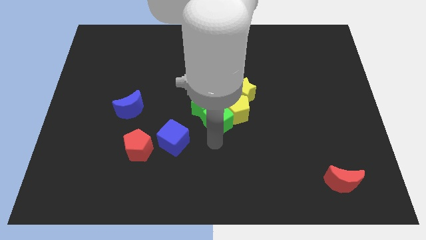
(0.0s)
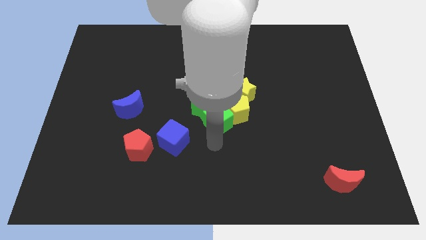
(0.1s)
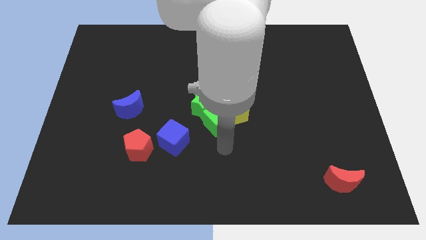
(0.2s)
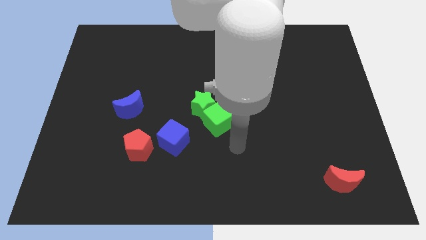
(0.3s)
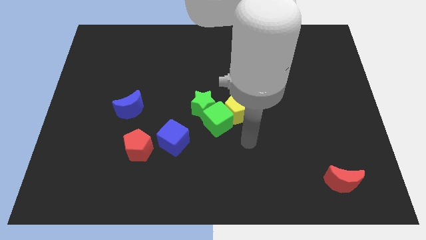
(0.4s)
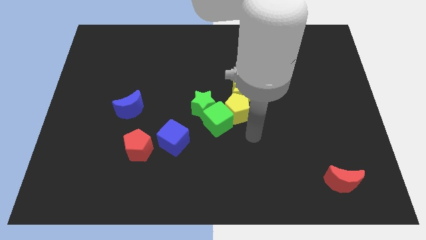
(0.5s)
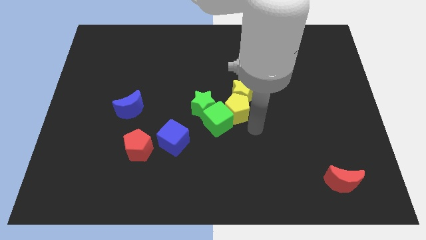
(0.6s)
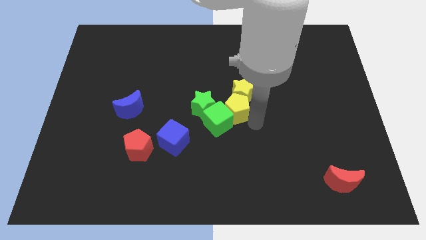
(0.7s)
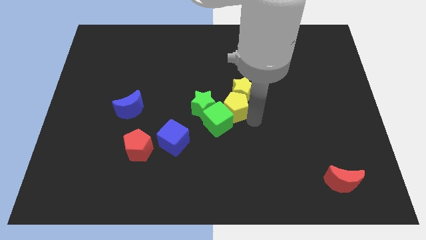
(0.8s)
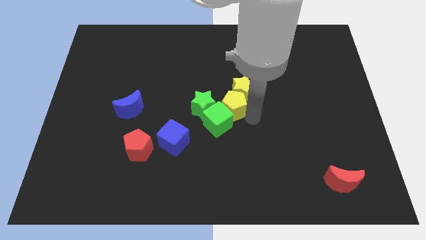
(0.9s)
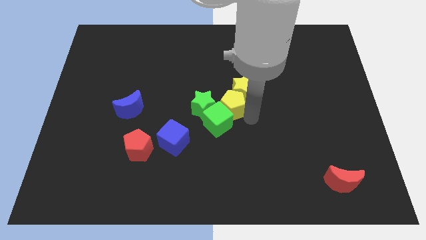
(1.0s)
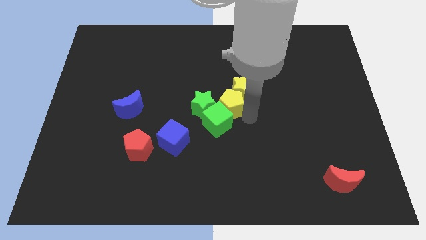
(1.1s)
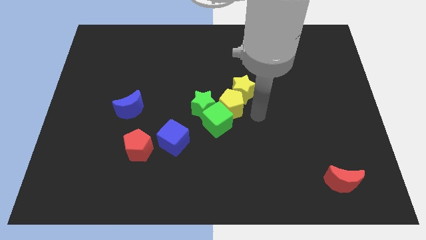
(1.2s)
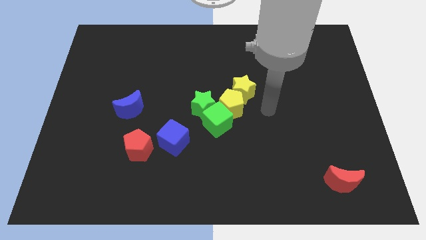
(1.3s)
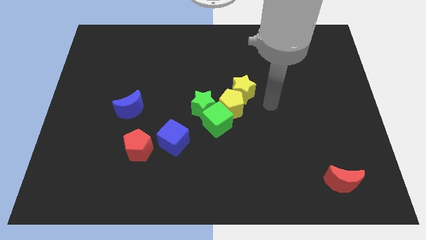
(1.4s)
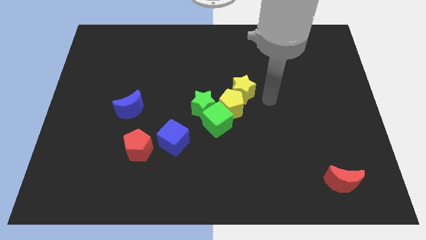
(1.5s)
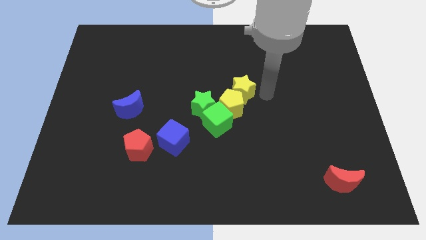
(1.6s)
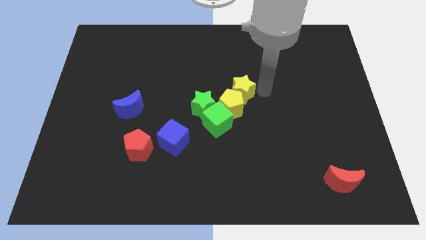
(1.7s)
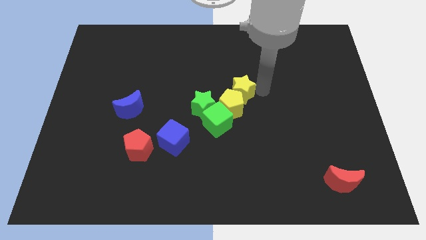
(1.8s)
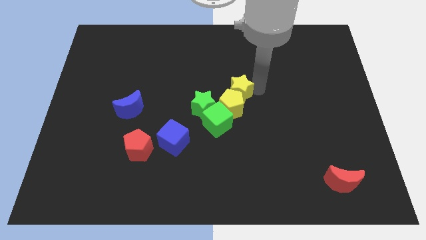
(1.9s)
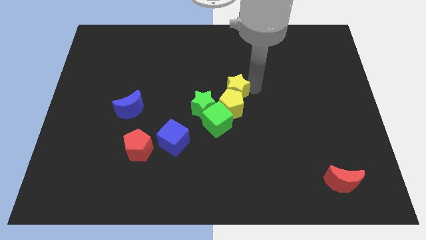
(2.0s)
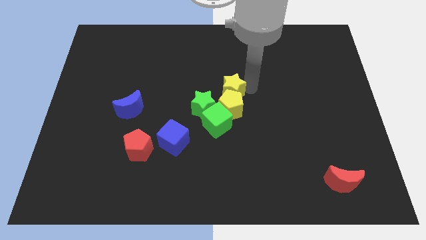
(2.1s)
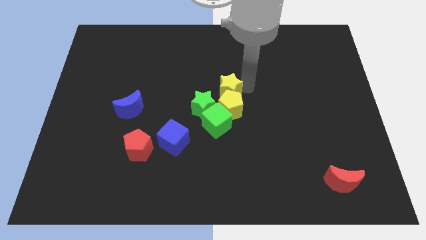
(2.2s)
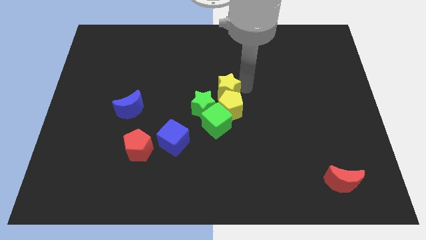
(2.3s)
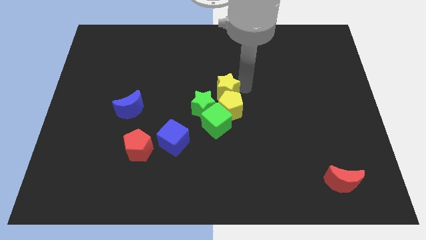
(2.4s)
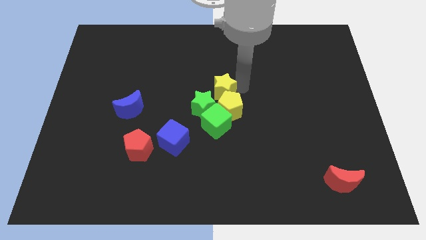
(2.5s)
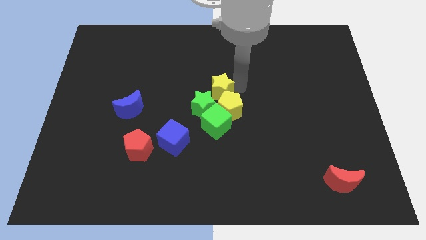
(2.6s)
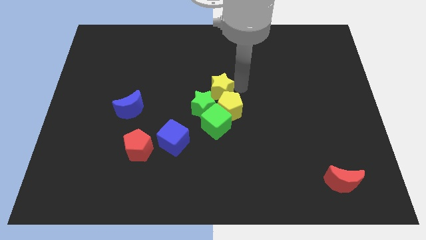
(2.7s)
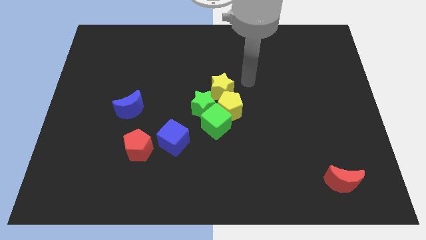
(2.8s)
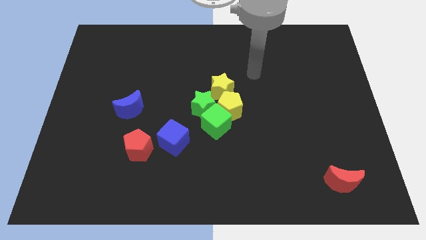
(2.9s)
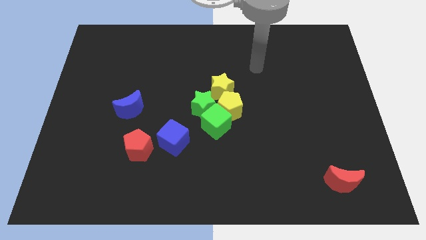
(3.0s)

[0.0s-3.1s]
push the yellow star slightly down

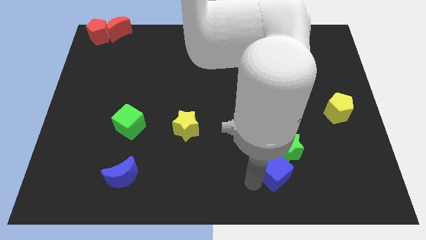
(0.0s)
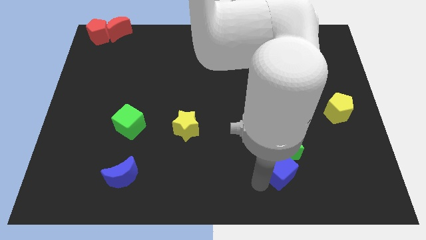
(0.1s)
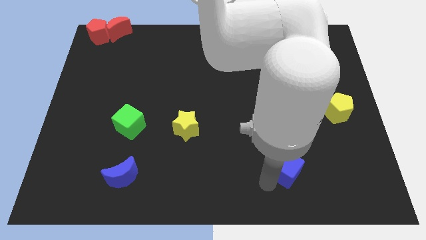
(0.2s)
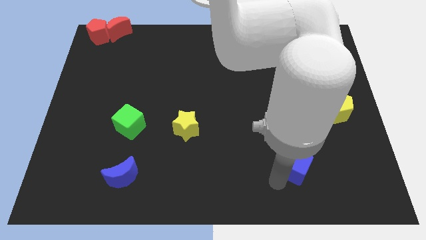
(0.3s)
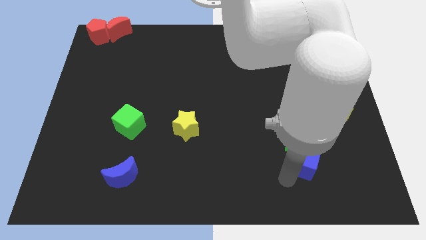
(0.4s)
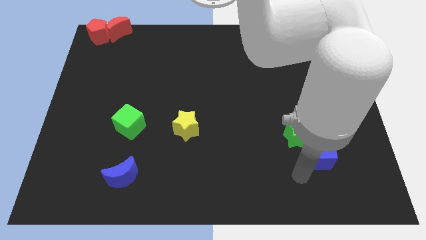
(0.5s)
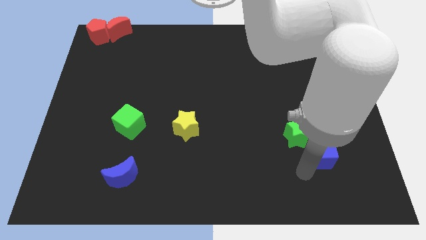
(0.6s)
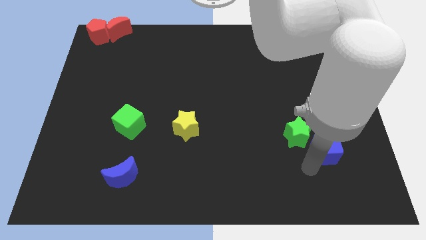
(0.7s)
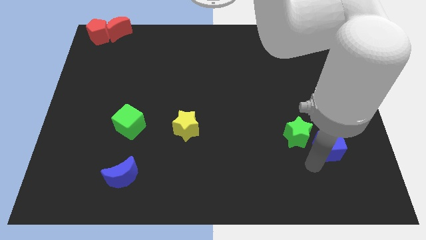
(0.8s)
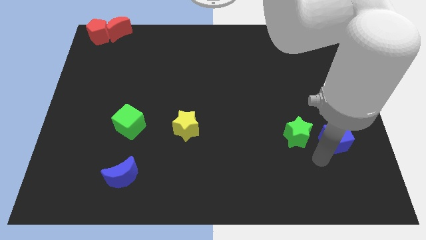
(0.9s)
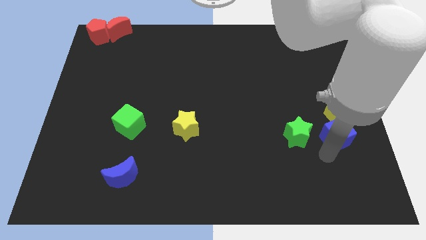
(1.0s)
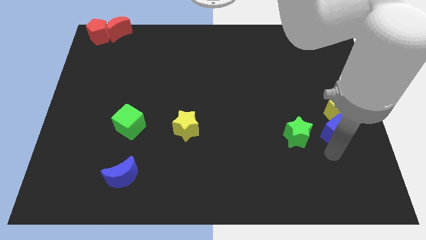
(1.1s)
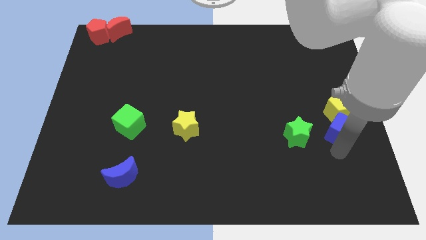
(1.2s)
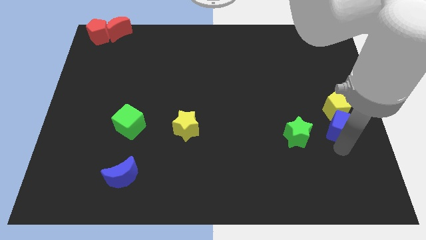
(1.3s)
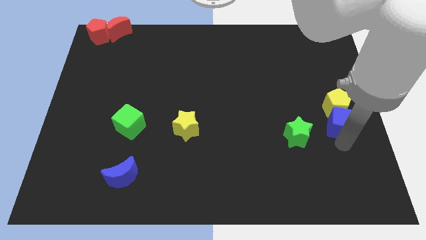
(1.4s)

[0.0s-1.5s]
place blue cute below yellow pentagon

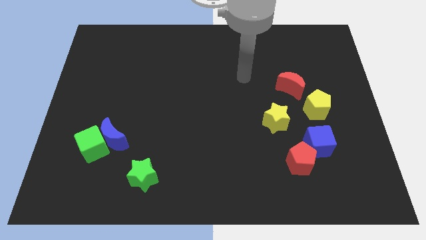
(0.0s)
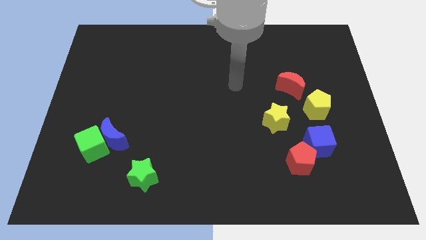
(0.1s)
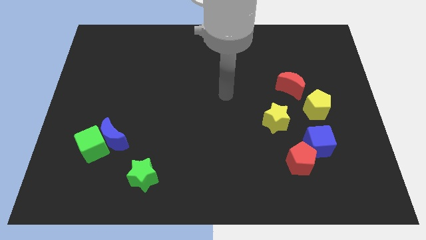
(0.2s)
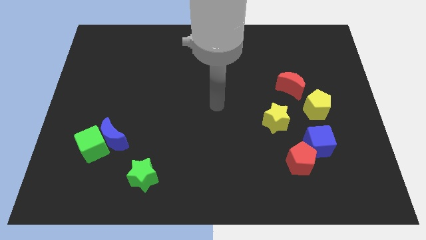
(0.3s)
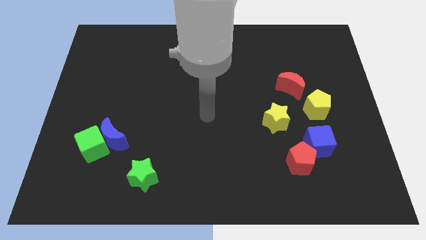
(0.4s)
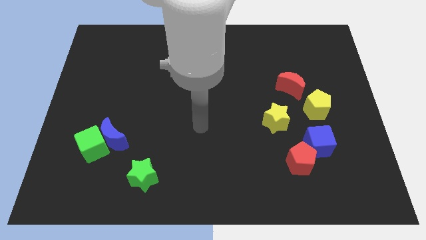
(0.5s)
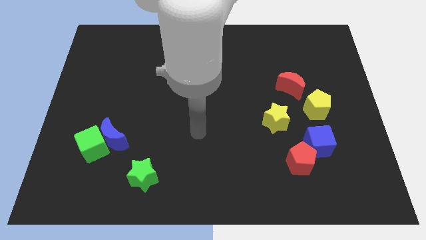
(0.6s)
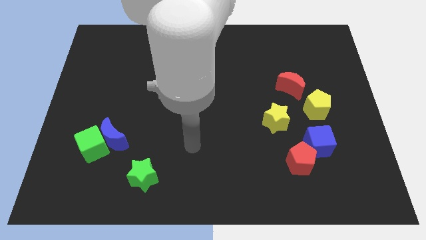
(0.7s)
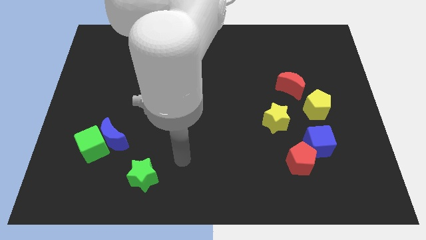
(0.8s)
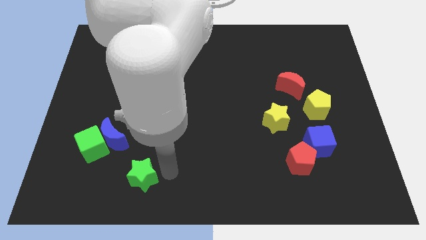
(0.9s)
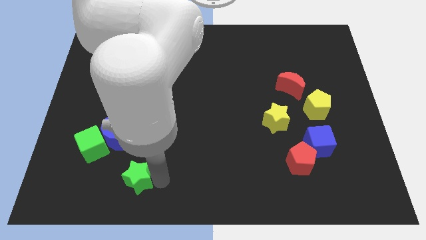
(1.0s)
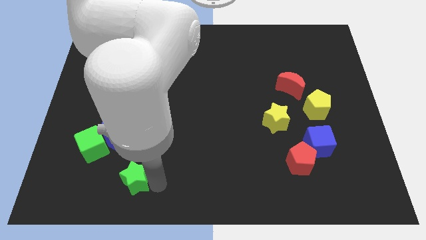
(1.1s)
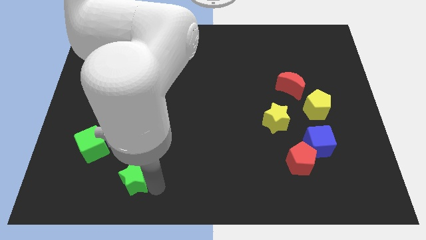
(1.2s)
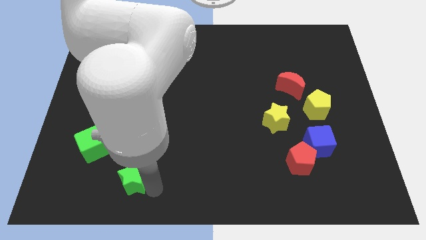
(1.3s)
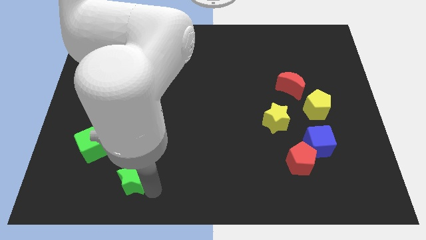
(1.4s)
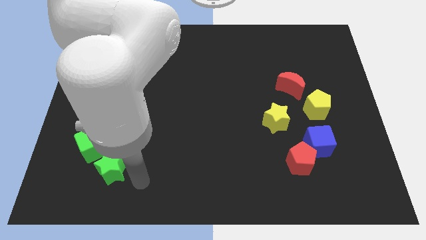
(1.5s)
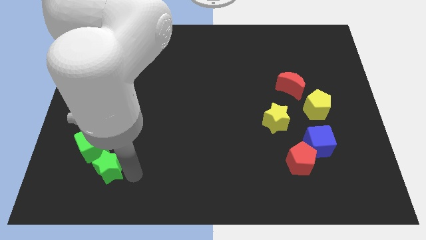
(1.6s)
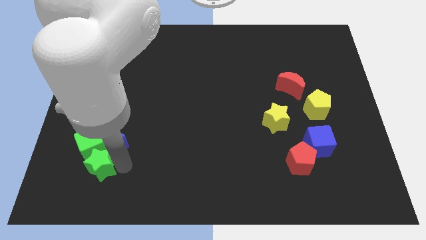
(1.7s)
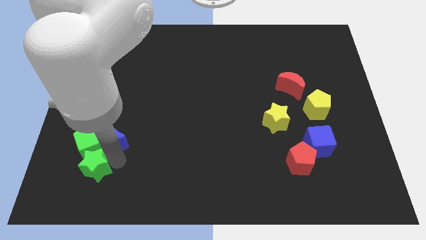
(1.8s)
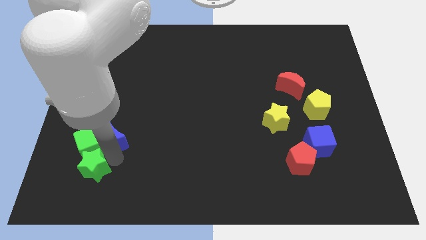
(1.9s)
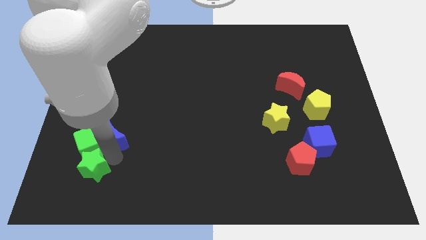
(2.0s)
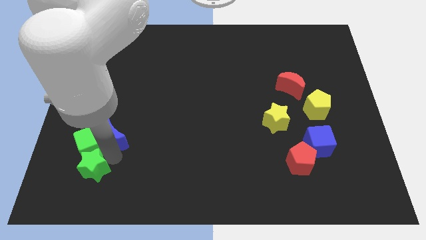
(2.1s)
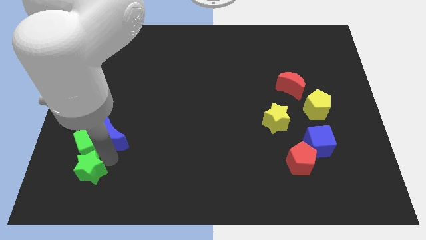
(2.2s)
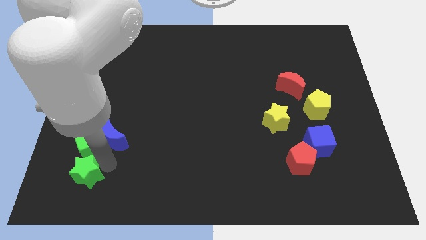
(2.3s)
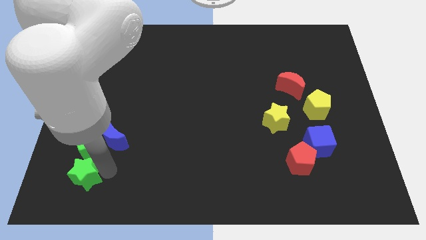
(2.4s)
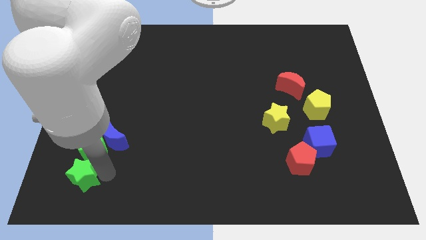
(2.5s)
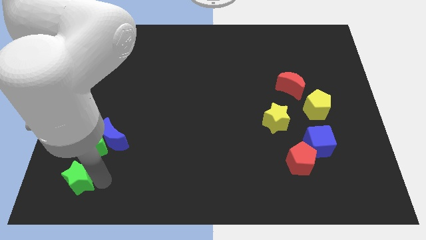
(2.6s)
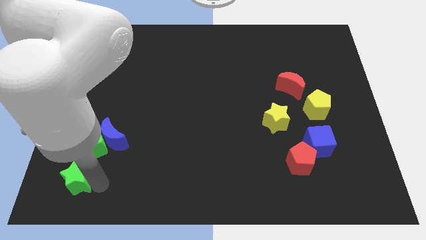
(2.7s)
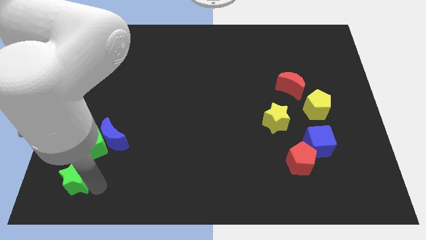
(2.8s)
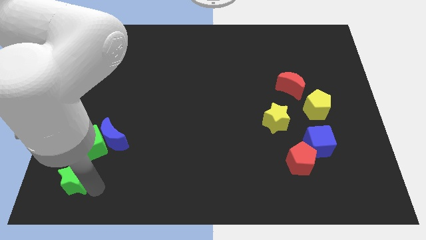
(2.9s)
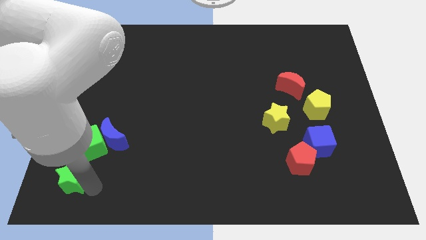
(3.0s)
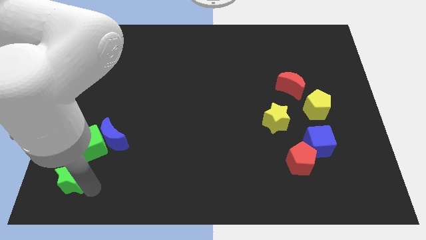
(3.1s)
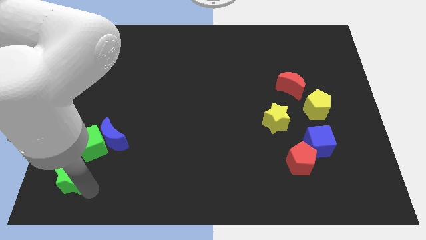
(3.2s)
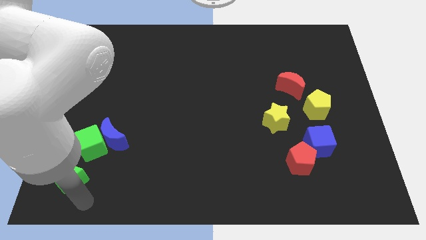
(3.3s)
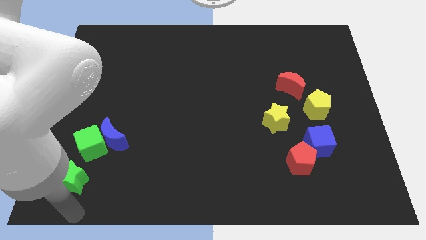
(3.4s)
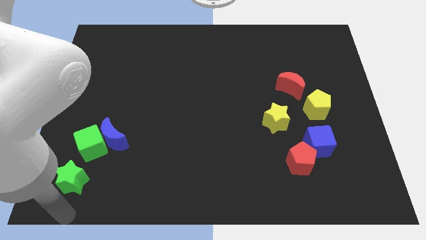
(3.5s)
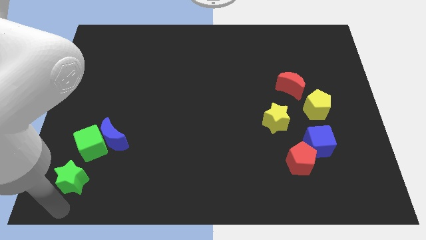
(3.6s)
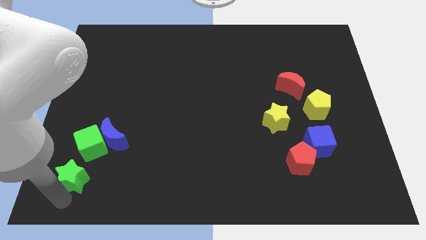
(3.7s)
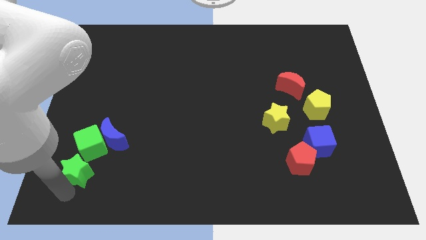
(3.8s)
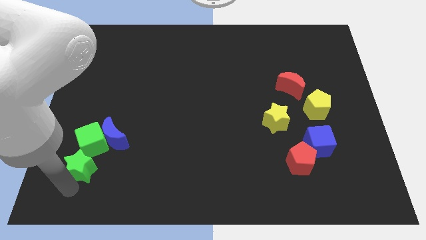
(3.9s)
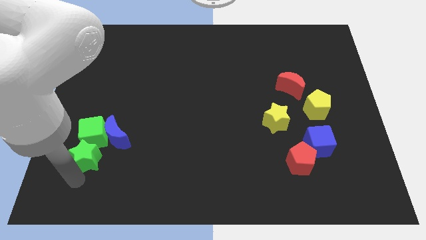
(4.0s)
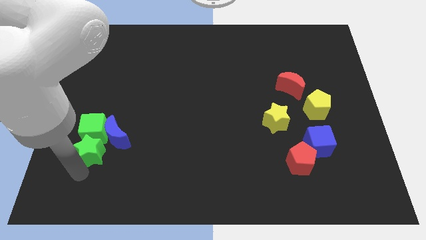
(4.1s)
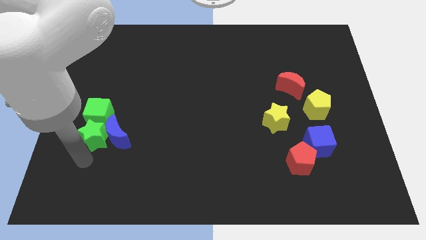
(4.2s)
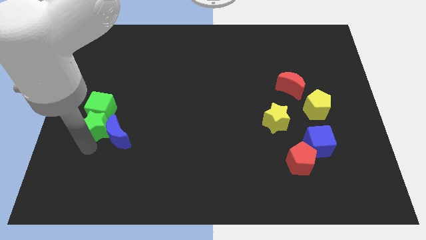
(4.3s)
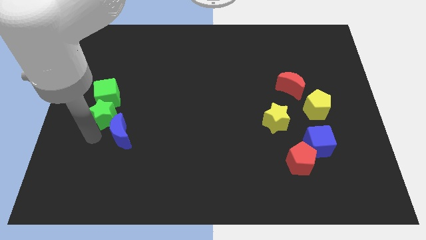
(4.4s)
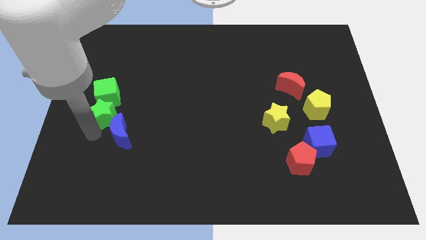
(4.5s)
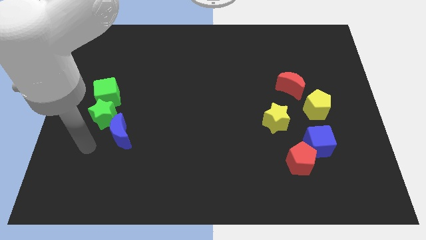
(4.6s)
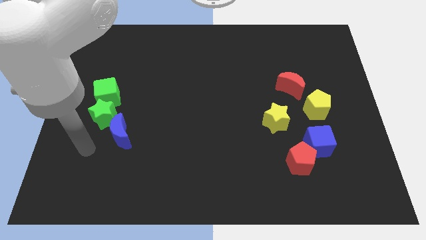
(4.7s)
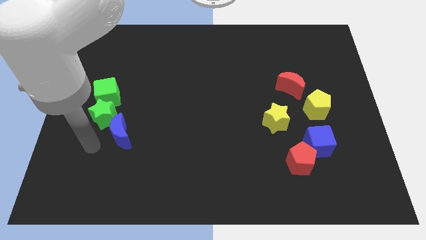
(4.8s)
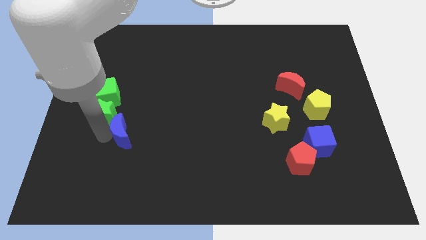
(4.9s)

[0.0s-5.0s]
push the green star into the green cube
